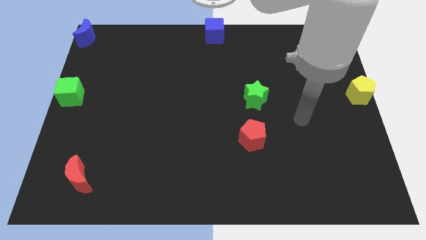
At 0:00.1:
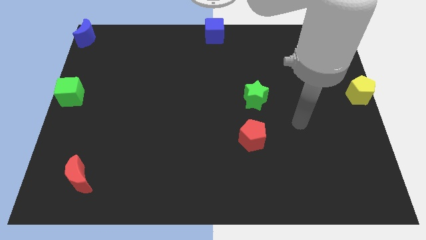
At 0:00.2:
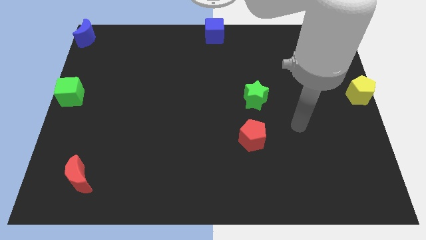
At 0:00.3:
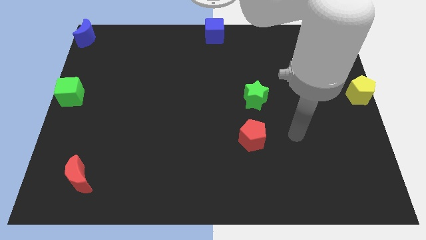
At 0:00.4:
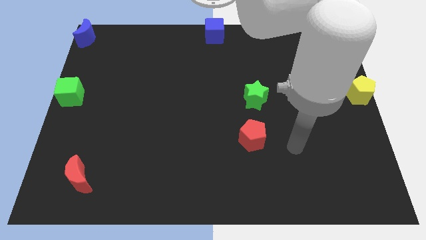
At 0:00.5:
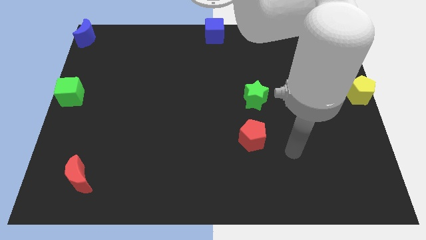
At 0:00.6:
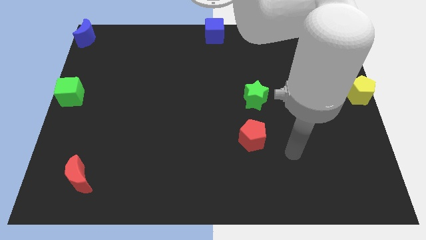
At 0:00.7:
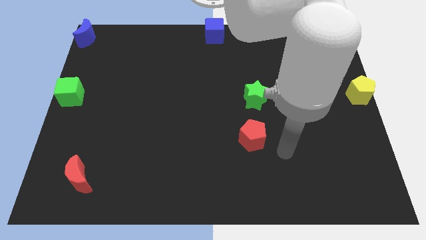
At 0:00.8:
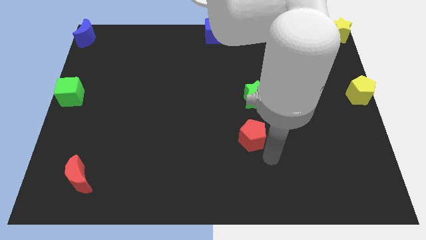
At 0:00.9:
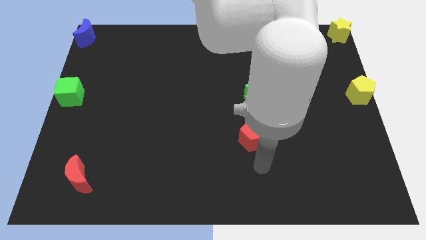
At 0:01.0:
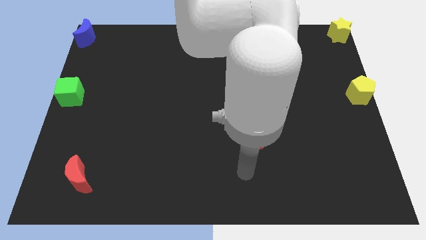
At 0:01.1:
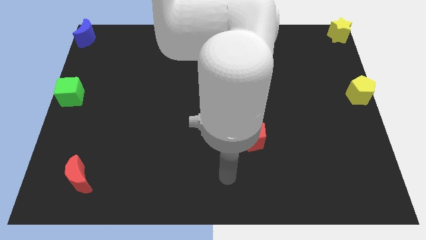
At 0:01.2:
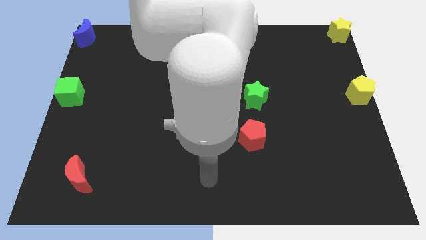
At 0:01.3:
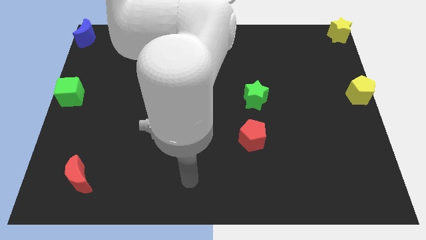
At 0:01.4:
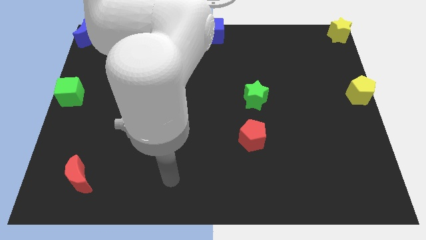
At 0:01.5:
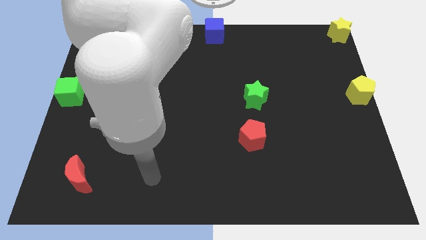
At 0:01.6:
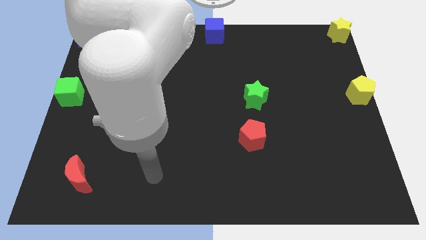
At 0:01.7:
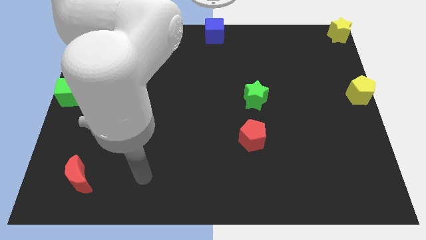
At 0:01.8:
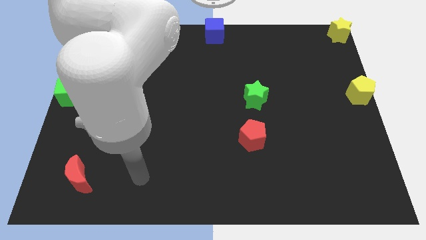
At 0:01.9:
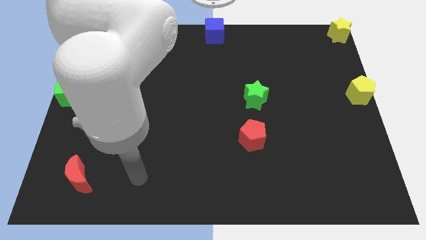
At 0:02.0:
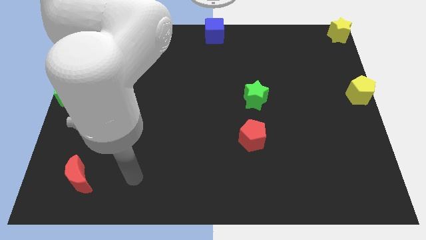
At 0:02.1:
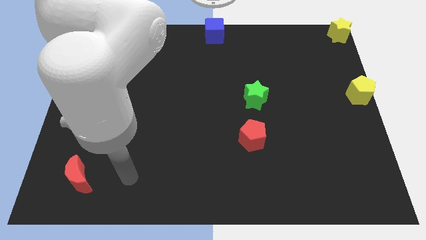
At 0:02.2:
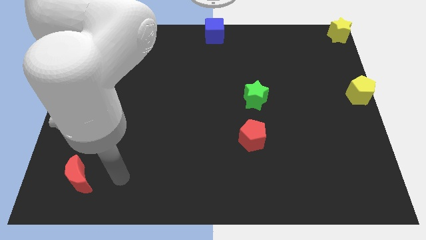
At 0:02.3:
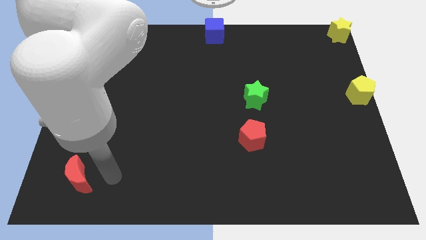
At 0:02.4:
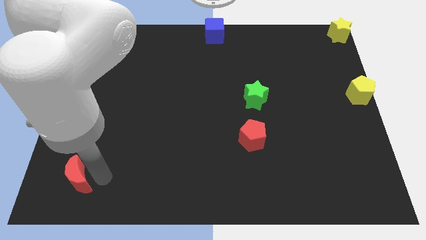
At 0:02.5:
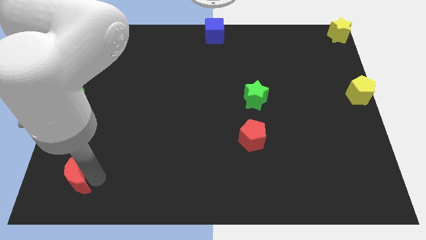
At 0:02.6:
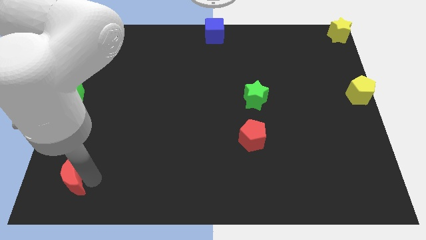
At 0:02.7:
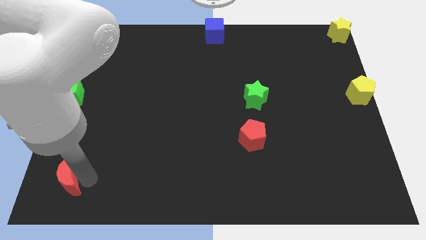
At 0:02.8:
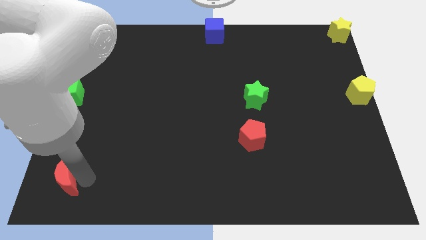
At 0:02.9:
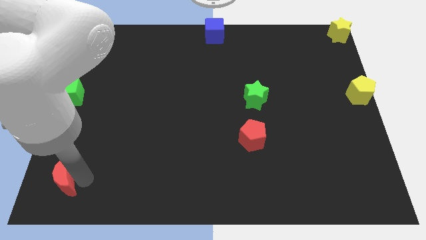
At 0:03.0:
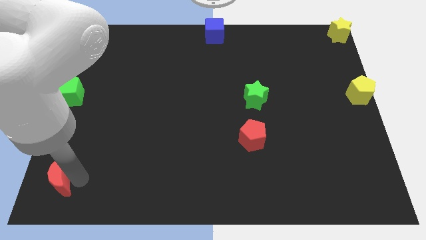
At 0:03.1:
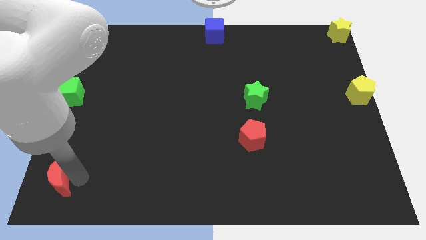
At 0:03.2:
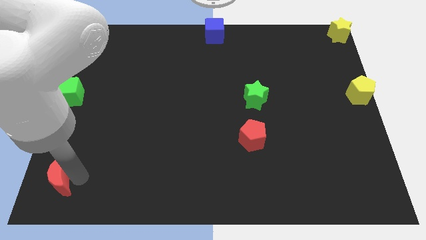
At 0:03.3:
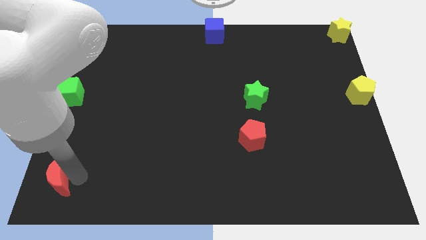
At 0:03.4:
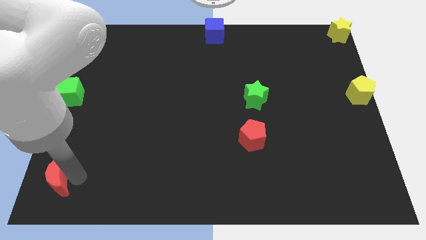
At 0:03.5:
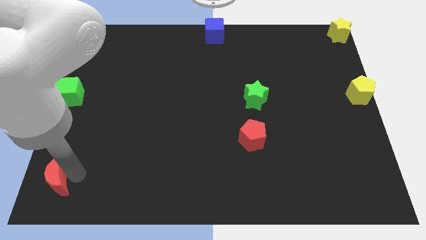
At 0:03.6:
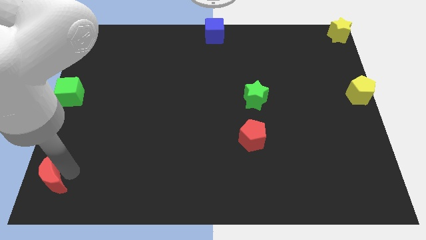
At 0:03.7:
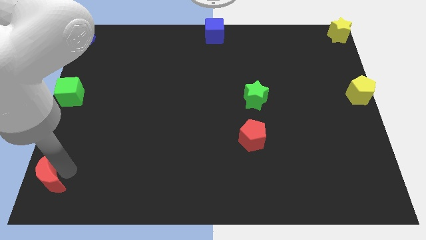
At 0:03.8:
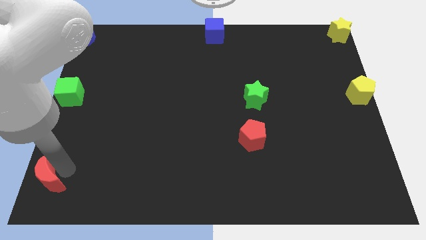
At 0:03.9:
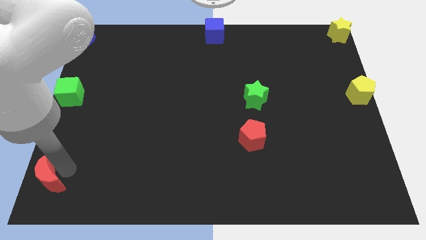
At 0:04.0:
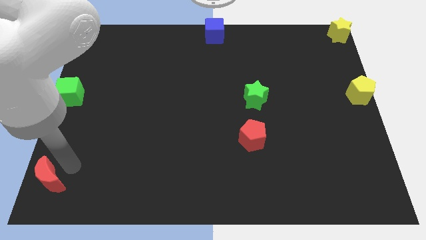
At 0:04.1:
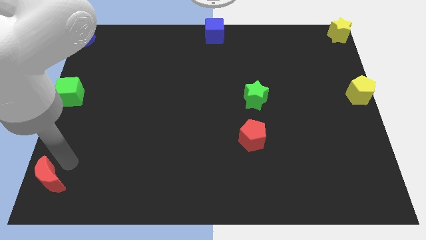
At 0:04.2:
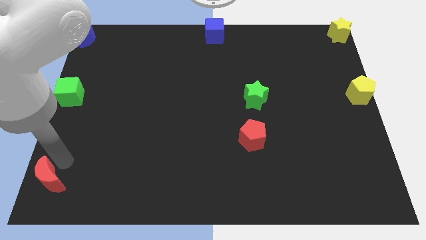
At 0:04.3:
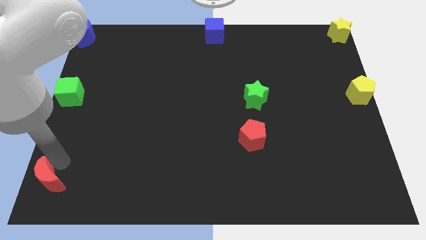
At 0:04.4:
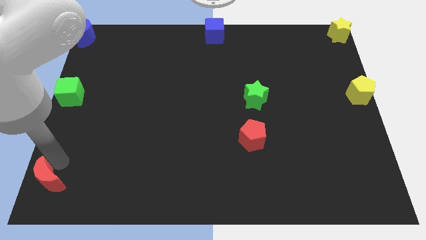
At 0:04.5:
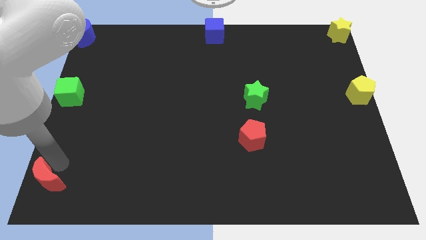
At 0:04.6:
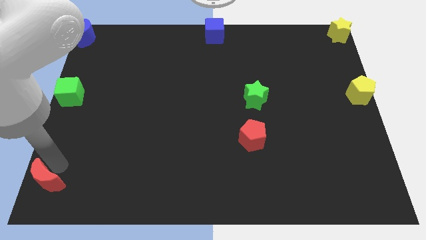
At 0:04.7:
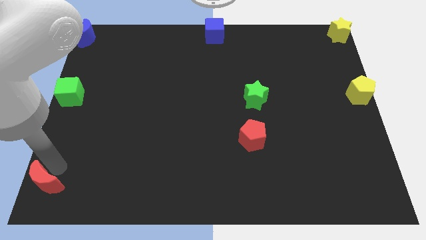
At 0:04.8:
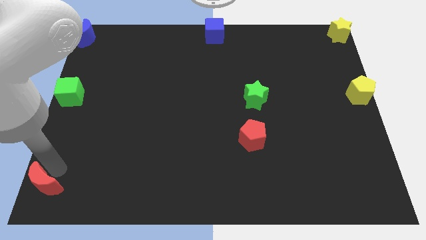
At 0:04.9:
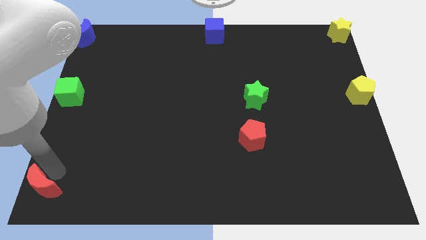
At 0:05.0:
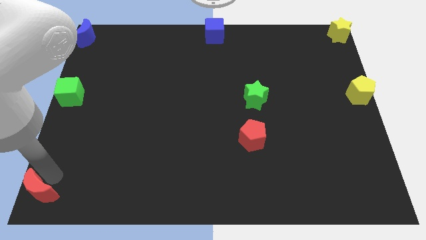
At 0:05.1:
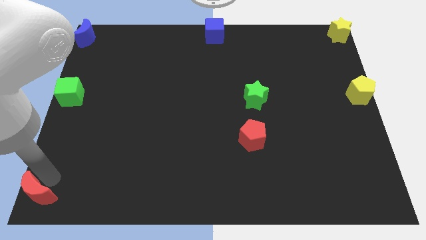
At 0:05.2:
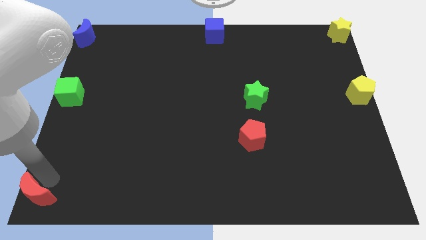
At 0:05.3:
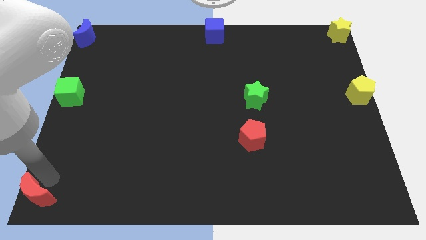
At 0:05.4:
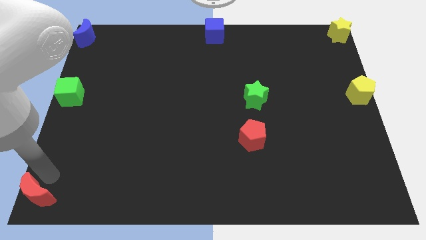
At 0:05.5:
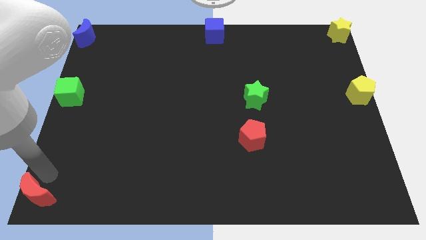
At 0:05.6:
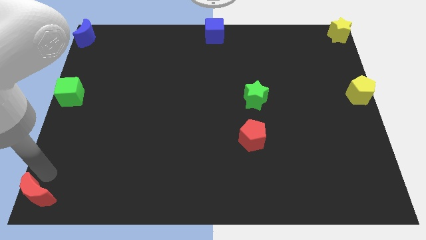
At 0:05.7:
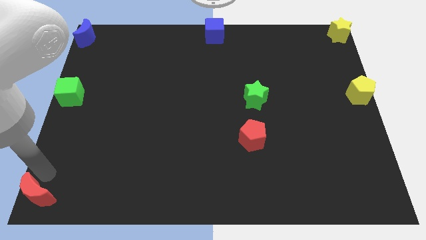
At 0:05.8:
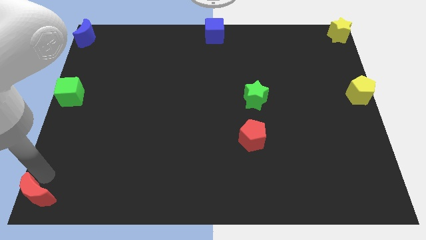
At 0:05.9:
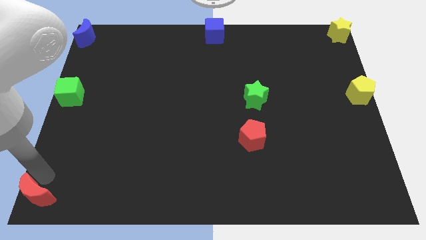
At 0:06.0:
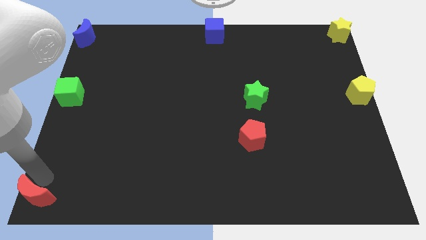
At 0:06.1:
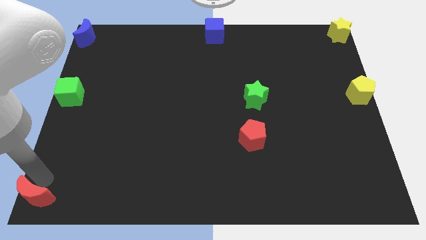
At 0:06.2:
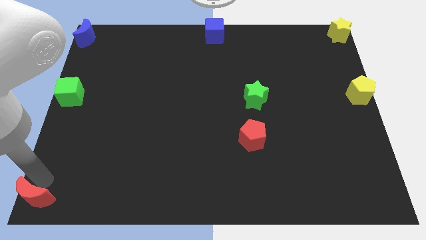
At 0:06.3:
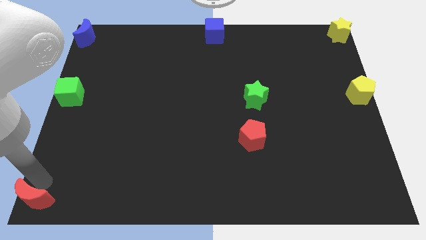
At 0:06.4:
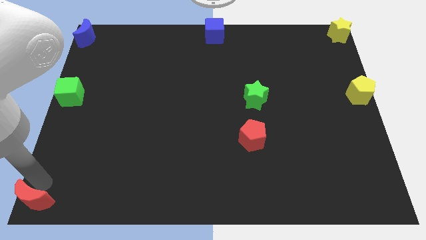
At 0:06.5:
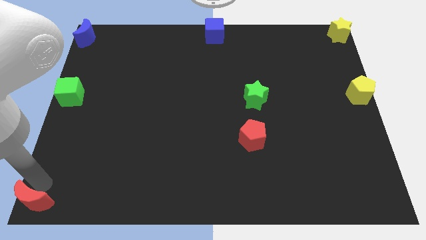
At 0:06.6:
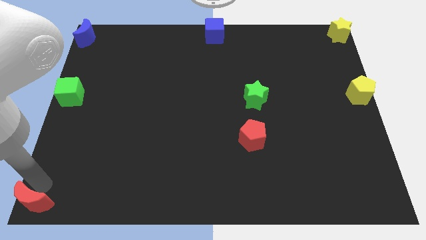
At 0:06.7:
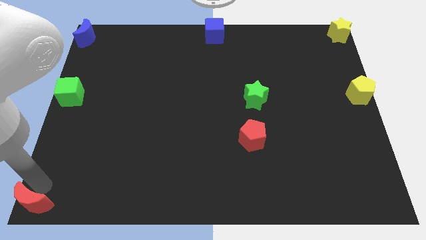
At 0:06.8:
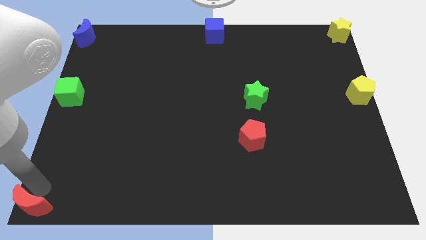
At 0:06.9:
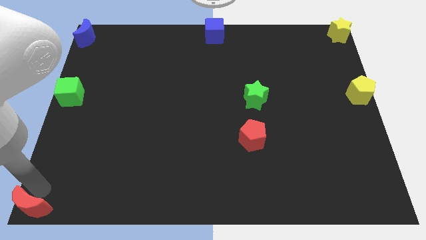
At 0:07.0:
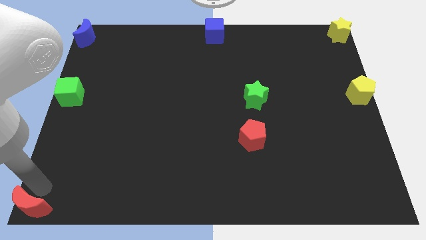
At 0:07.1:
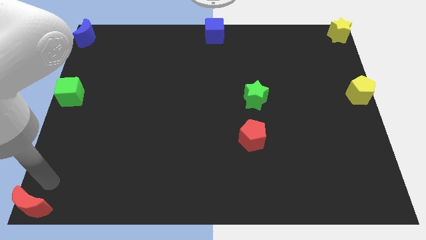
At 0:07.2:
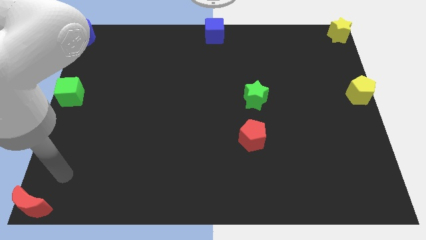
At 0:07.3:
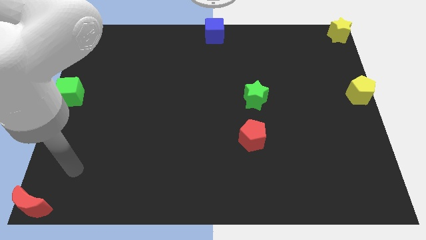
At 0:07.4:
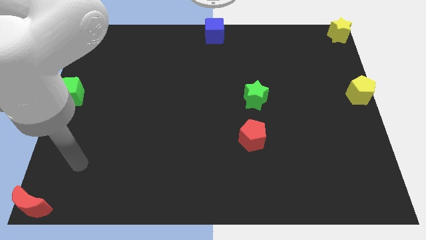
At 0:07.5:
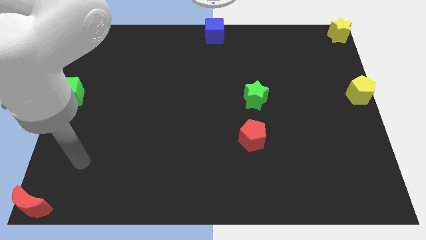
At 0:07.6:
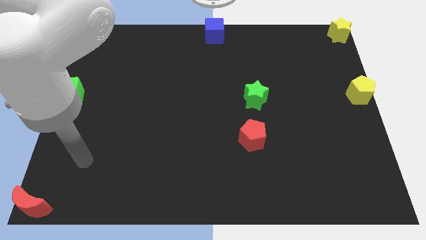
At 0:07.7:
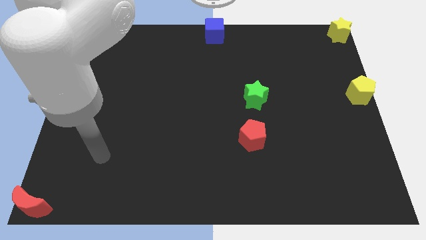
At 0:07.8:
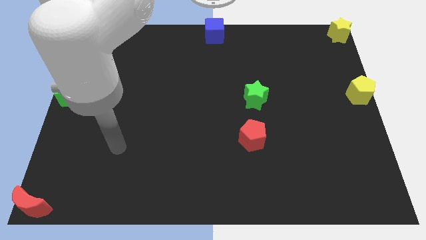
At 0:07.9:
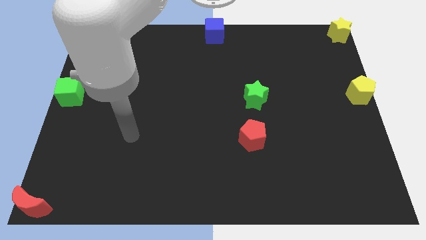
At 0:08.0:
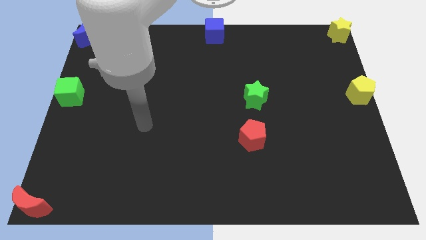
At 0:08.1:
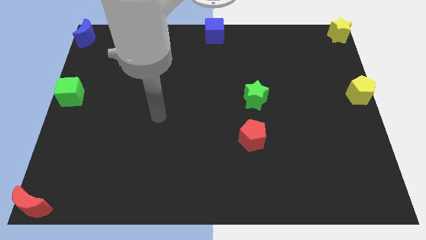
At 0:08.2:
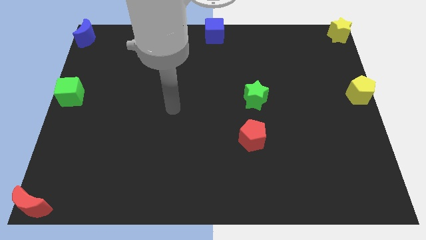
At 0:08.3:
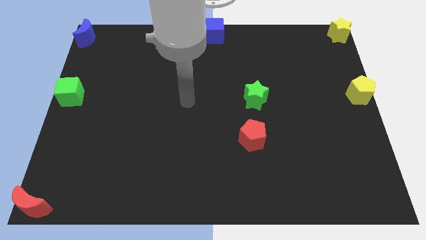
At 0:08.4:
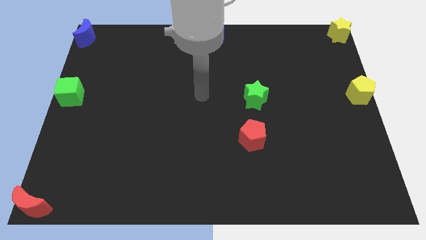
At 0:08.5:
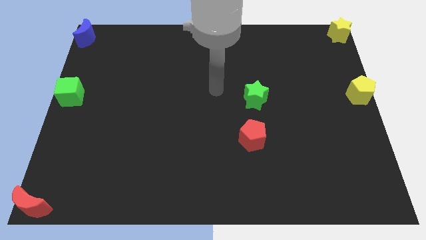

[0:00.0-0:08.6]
move the red crescent to the left bottom corner

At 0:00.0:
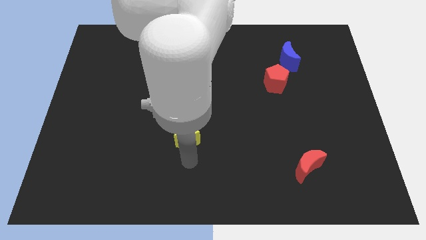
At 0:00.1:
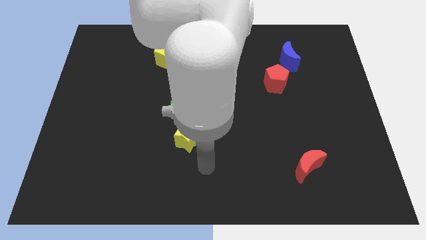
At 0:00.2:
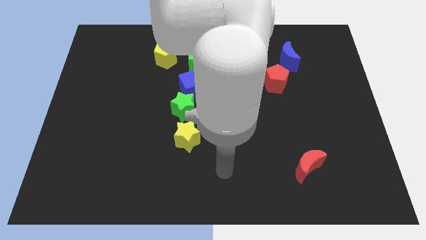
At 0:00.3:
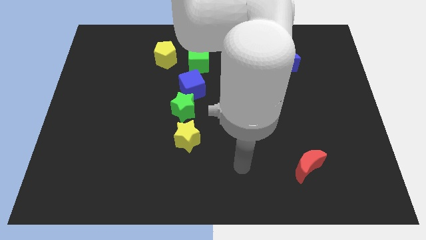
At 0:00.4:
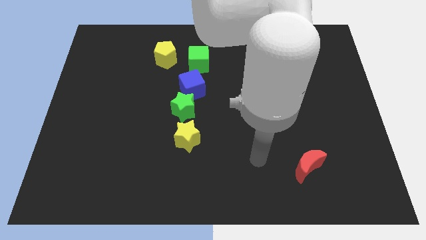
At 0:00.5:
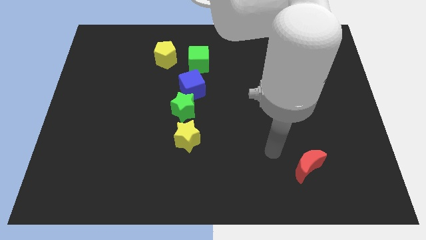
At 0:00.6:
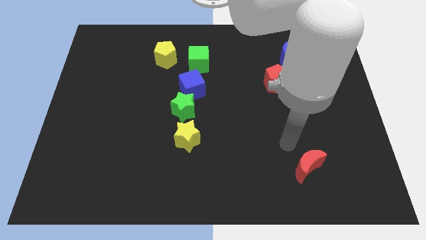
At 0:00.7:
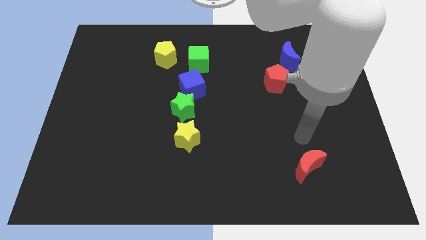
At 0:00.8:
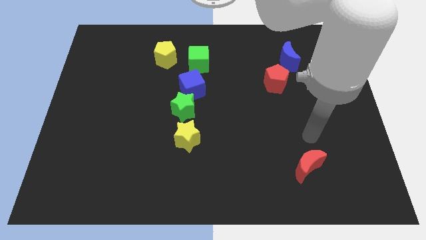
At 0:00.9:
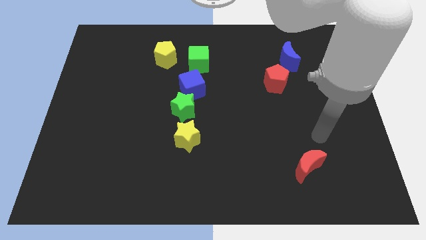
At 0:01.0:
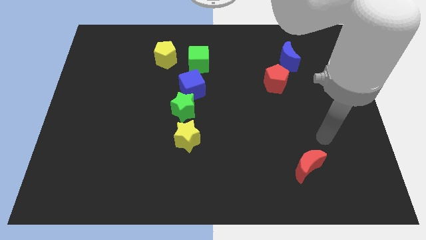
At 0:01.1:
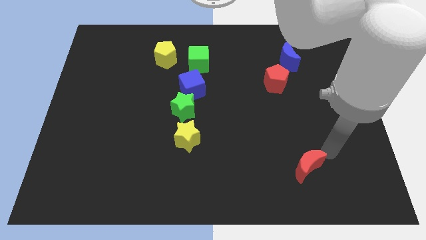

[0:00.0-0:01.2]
move your arm away from the yellow star
